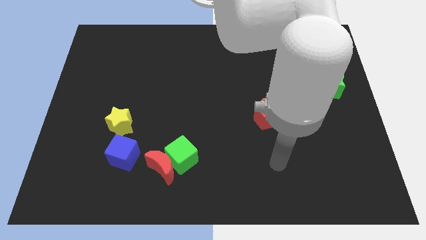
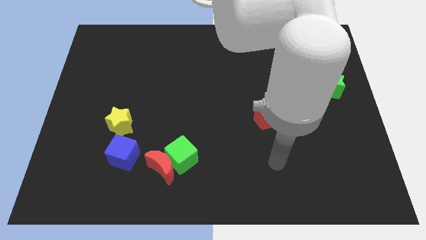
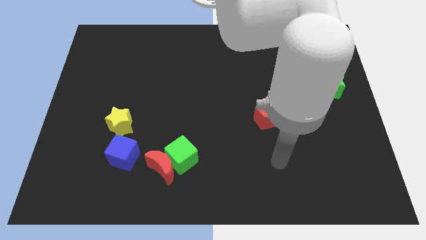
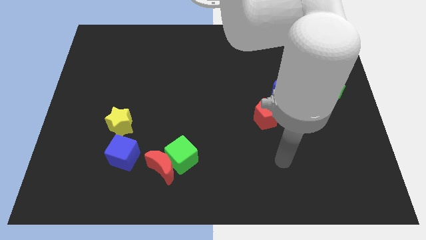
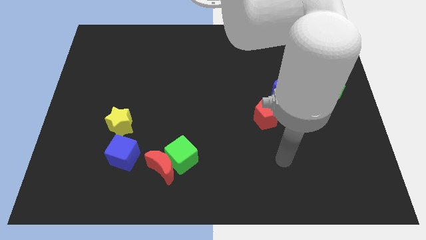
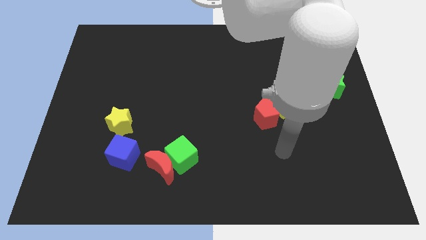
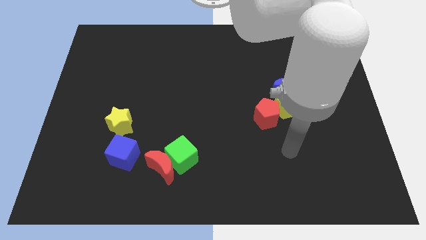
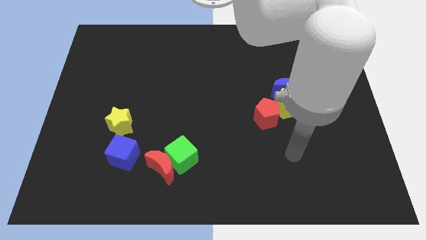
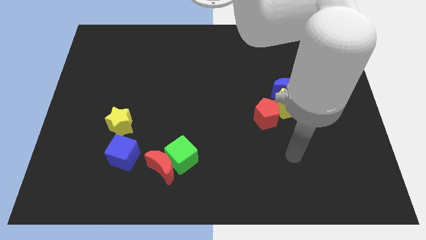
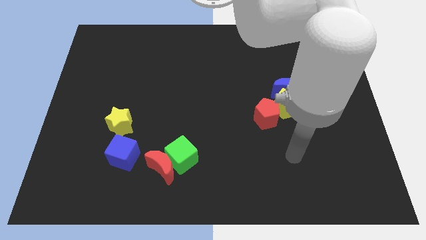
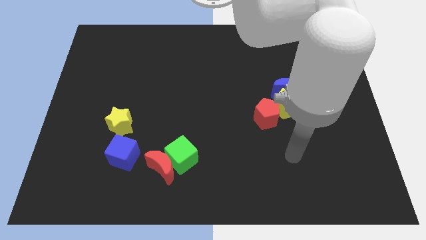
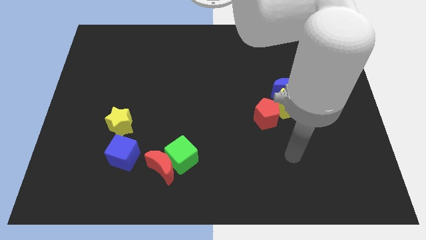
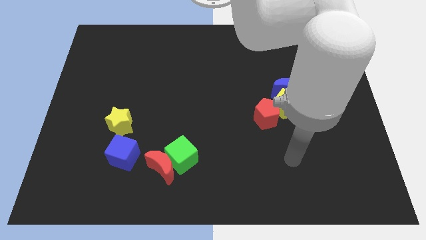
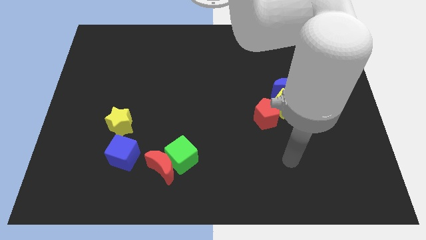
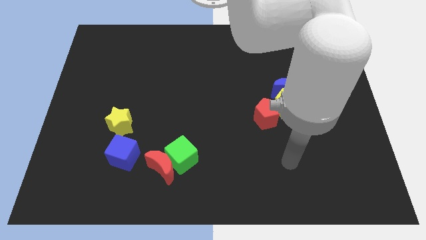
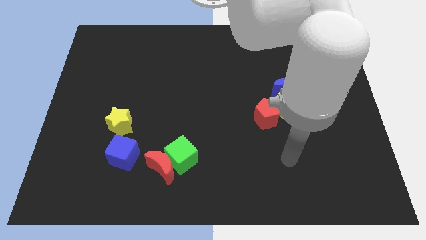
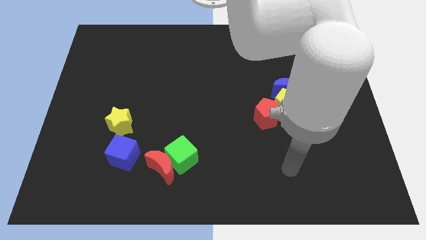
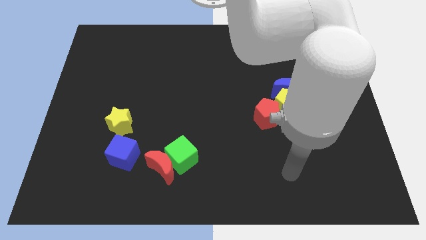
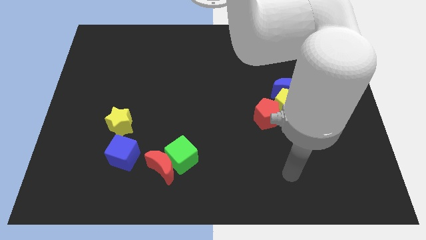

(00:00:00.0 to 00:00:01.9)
point your arm below the red pentagon

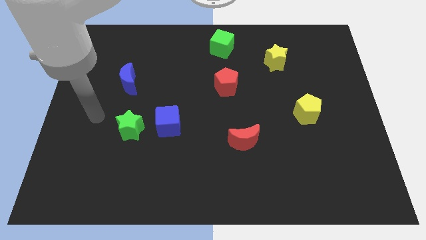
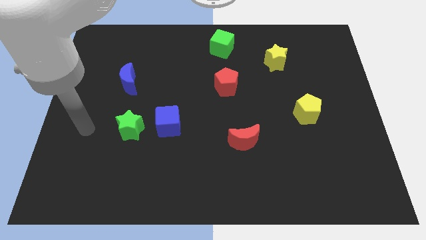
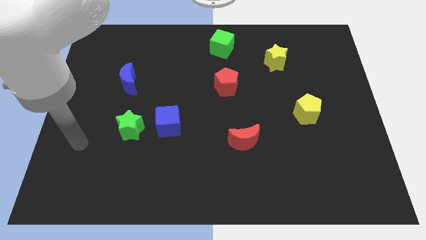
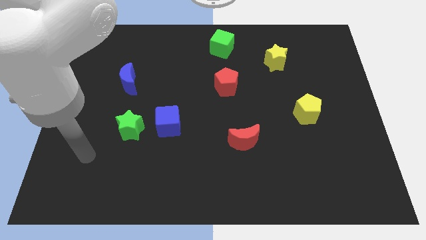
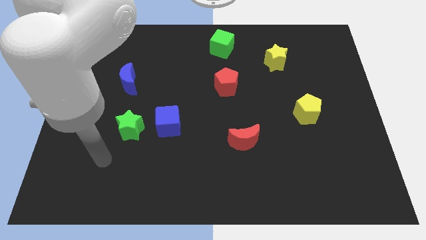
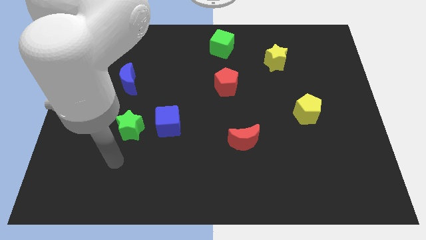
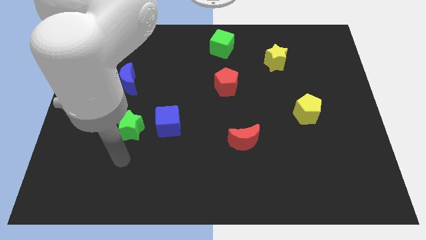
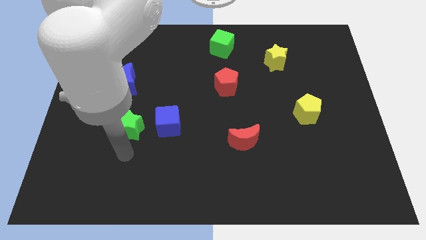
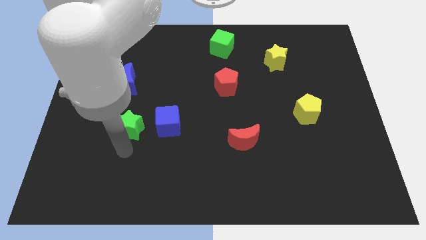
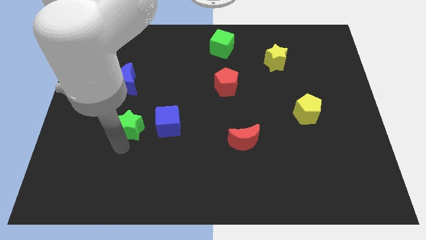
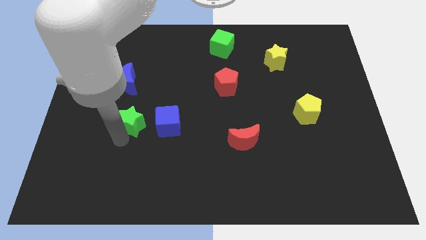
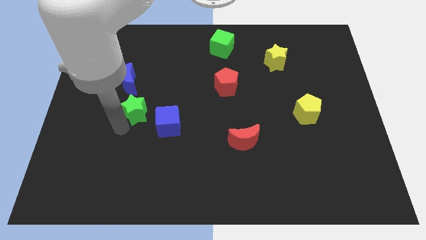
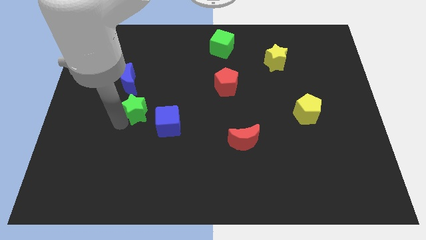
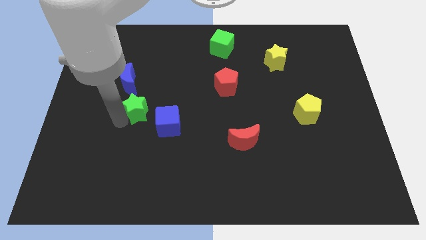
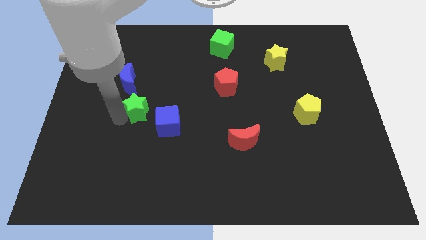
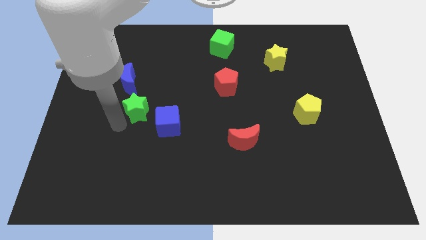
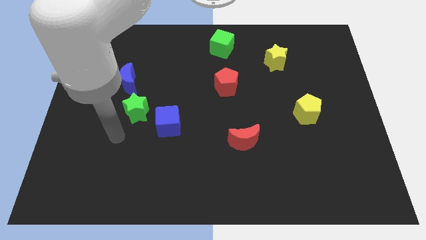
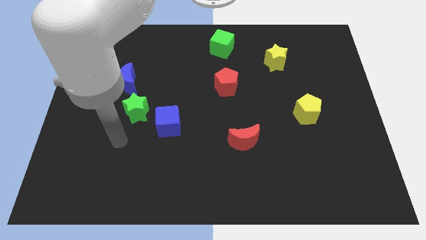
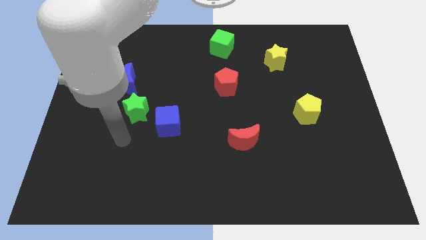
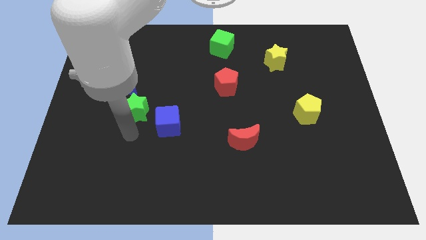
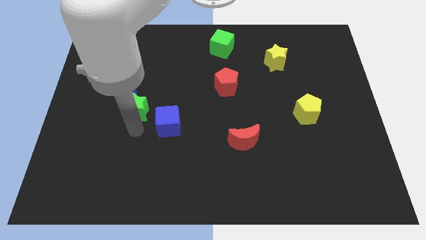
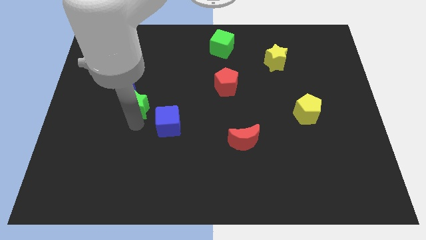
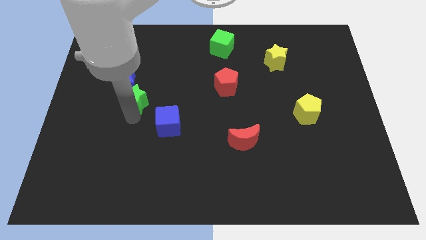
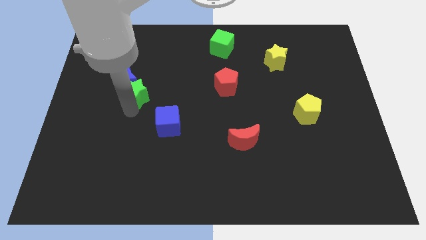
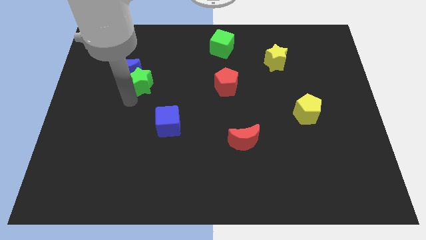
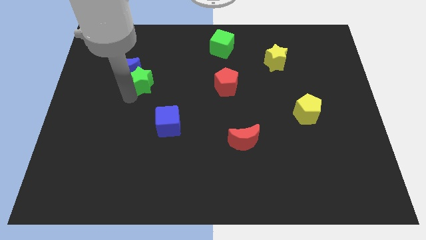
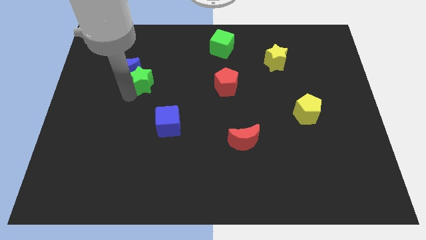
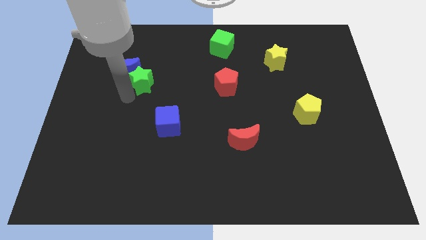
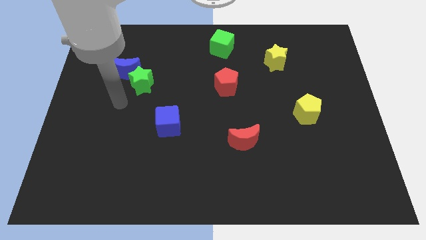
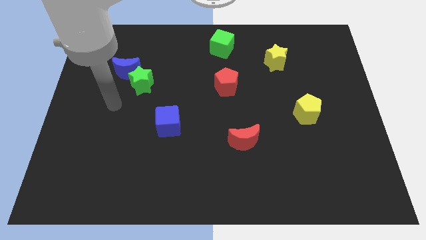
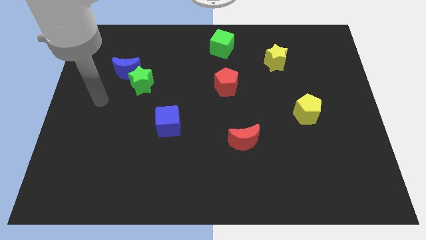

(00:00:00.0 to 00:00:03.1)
push the green star into the blue moon

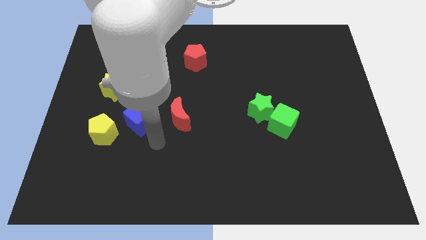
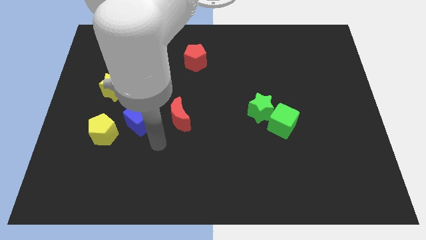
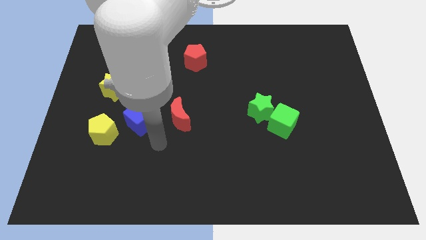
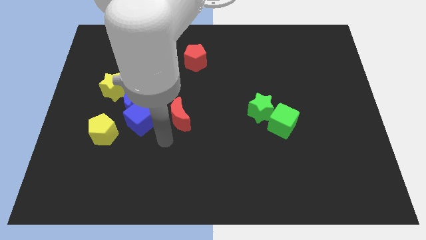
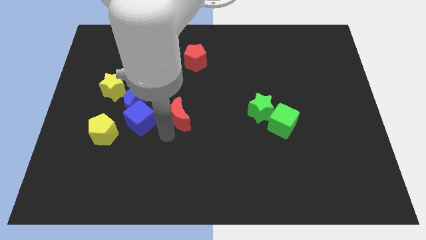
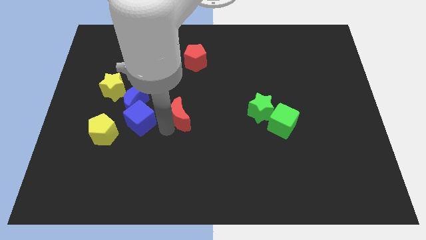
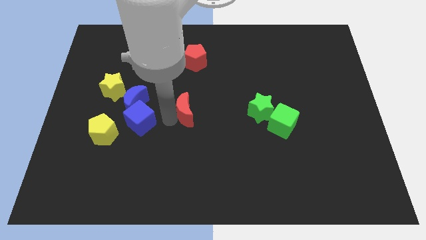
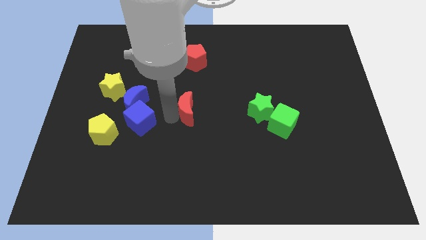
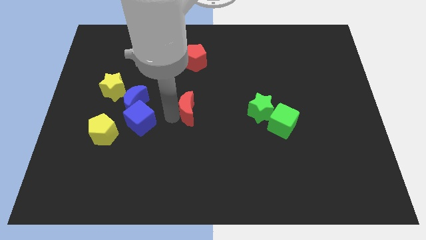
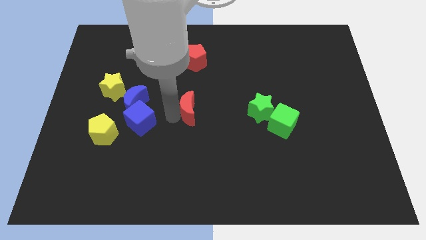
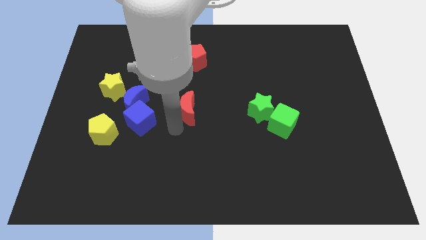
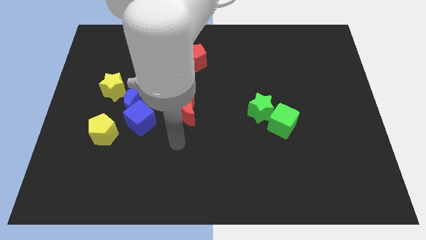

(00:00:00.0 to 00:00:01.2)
slide red moon towards center

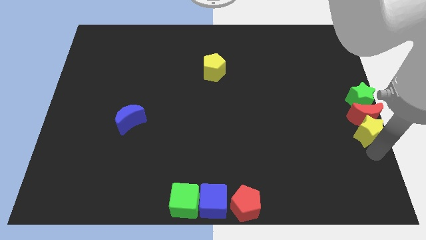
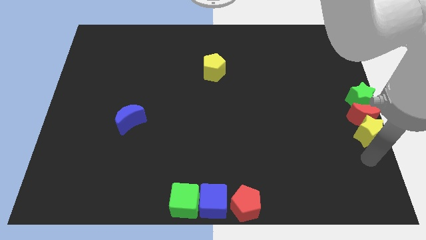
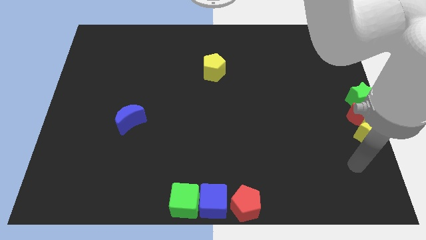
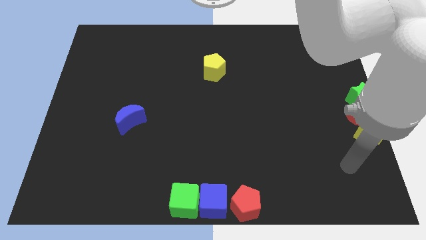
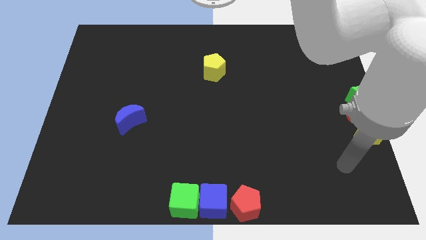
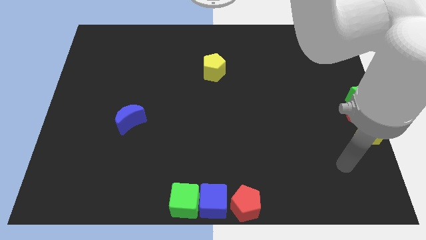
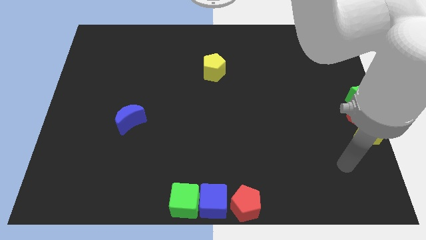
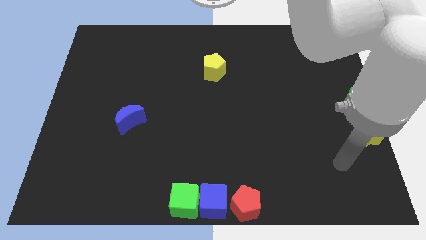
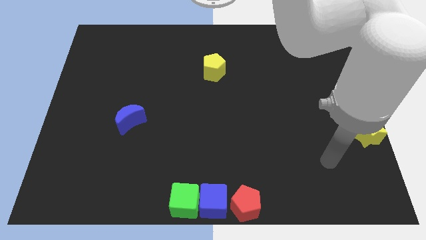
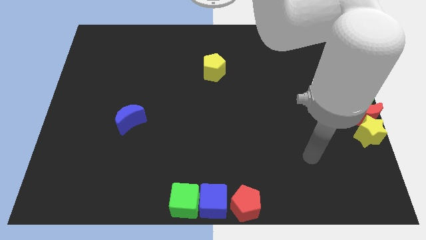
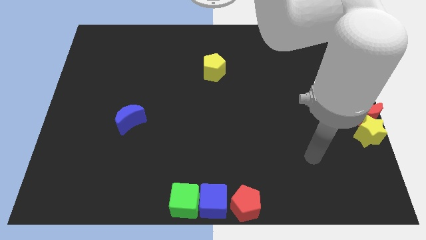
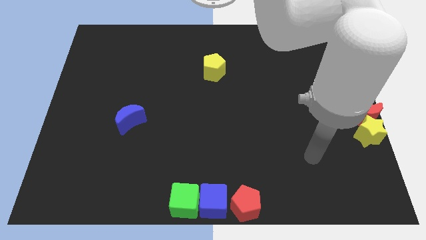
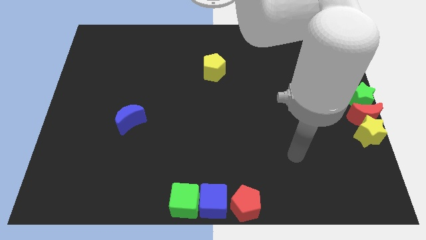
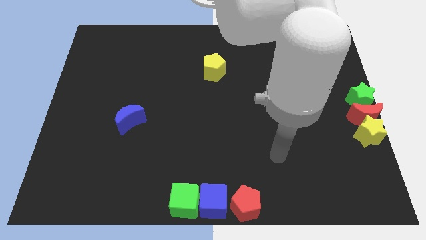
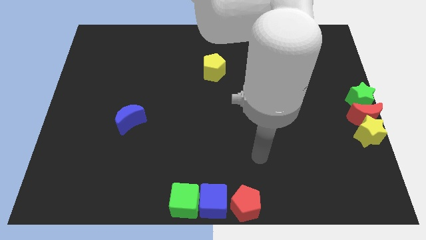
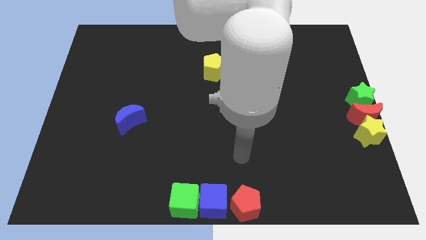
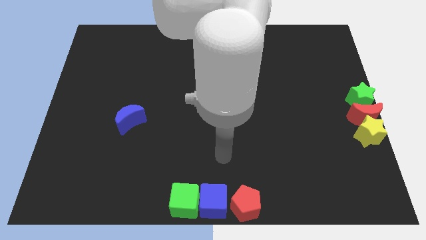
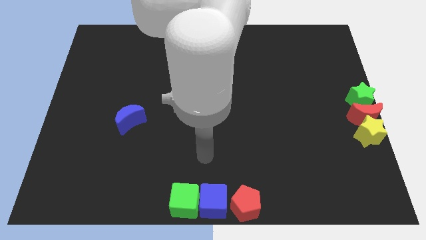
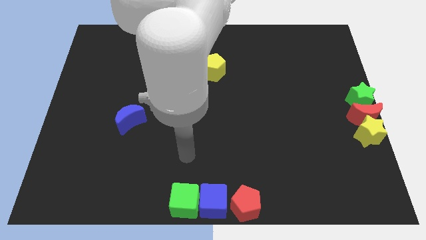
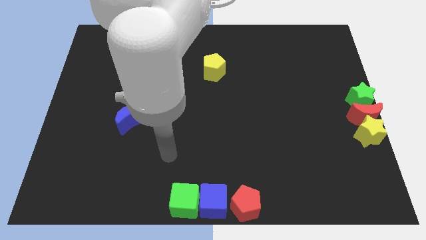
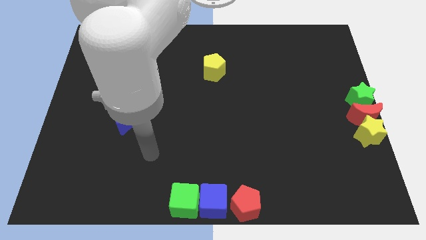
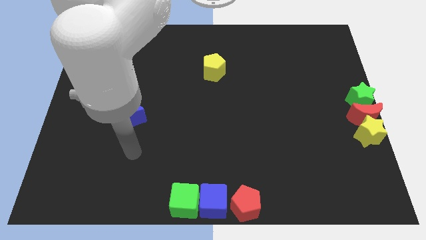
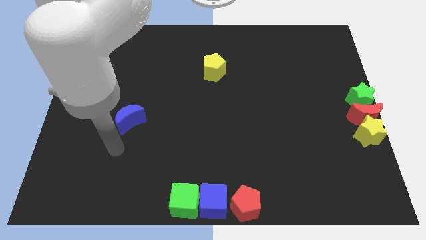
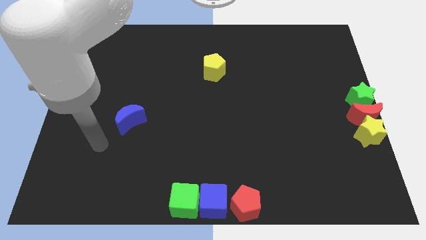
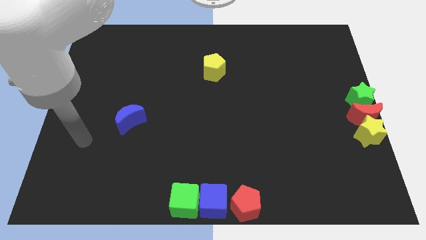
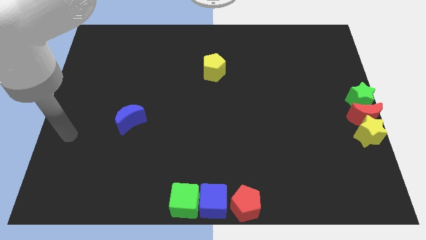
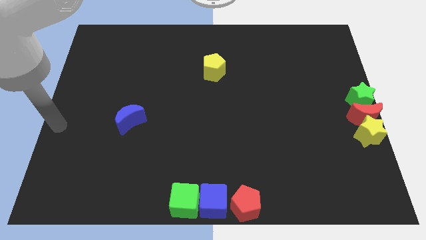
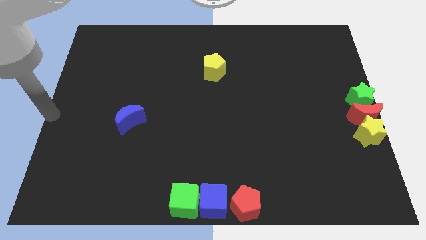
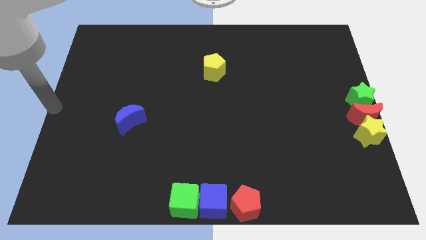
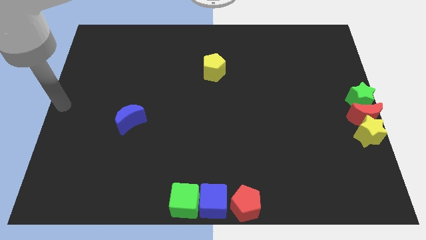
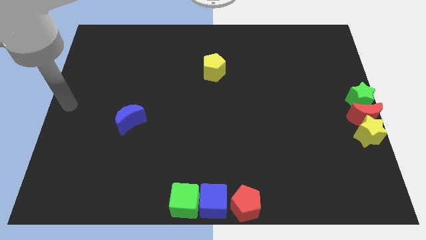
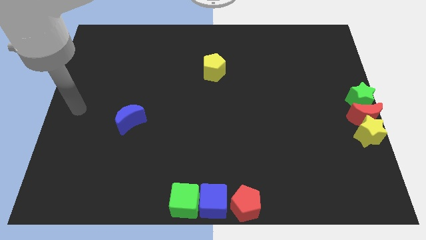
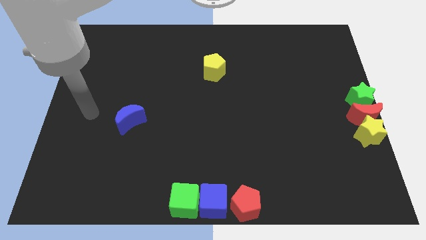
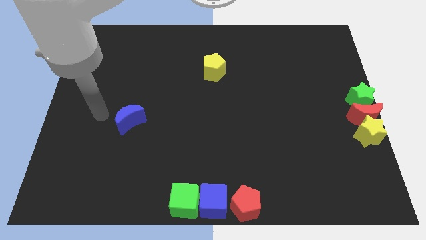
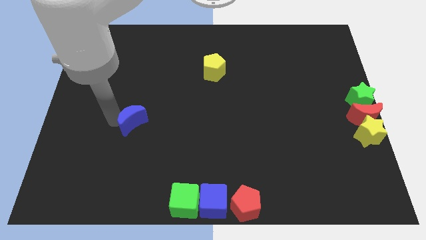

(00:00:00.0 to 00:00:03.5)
place your arm left to blue moon
